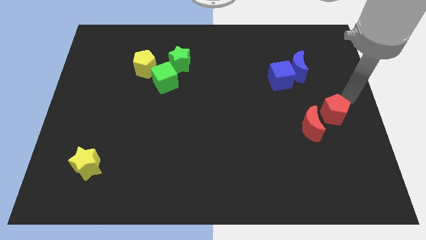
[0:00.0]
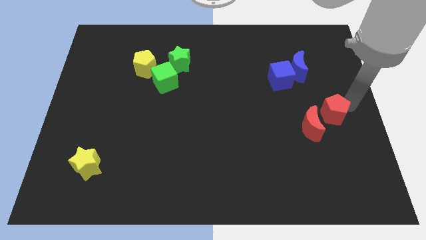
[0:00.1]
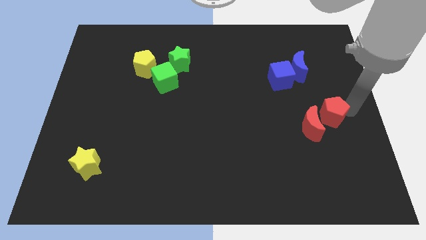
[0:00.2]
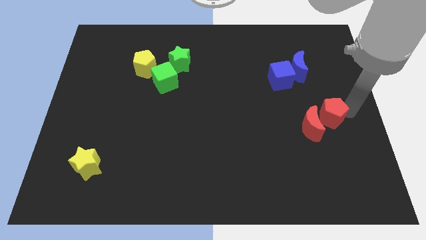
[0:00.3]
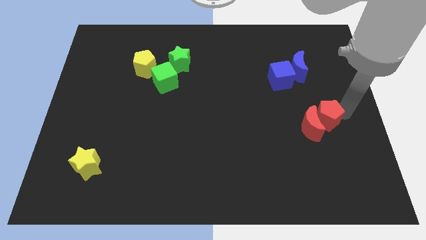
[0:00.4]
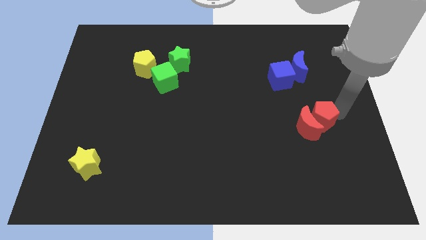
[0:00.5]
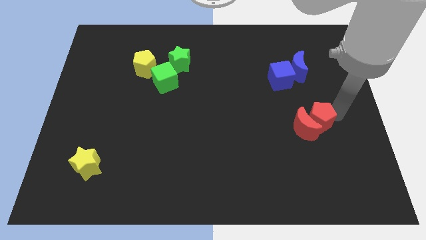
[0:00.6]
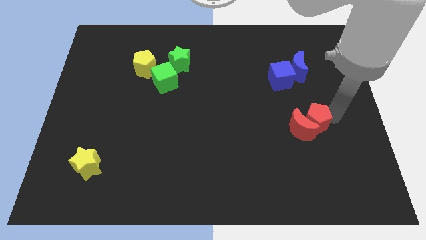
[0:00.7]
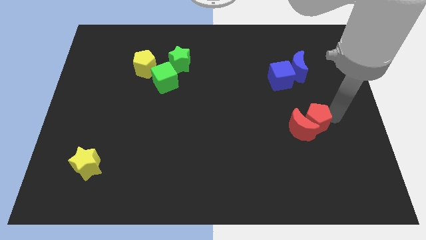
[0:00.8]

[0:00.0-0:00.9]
push the red pentagon into the red crescent

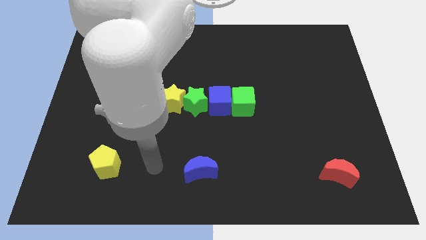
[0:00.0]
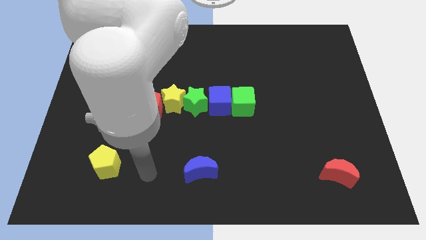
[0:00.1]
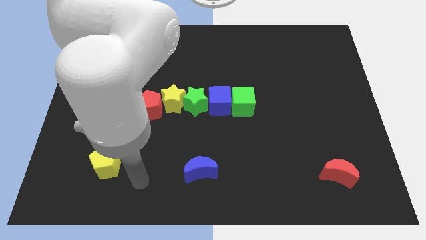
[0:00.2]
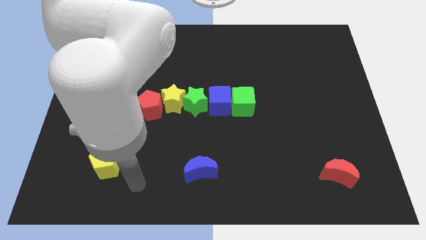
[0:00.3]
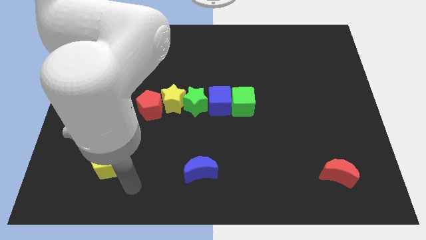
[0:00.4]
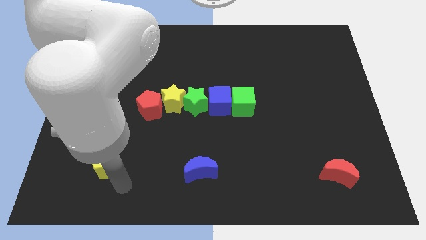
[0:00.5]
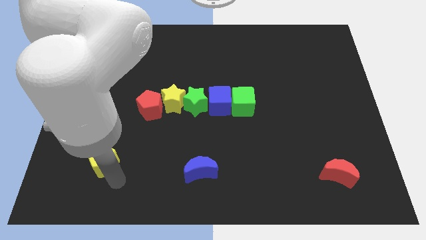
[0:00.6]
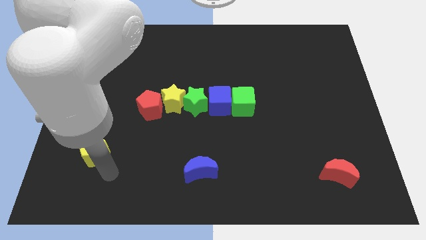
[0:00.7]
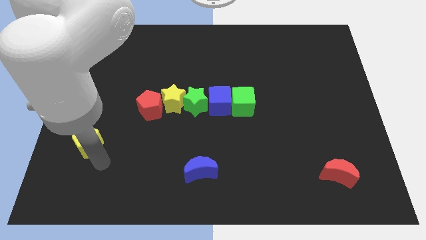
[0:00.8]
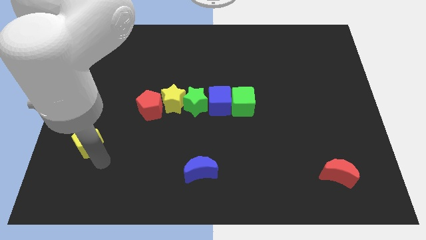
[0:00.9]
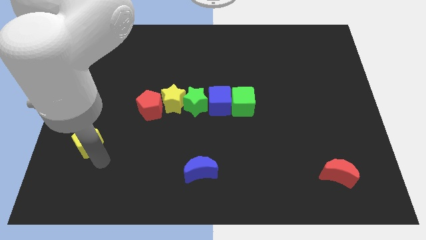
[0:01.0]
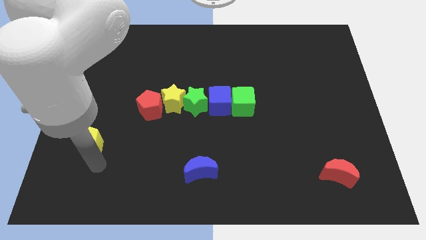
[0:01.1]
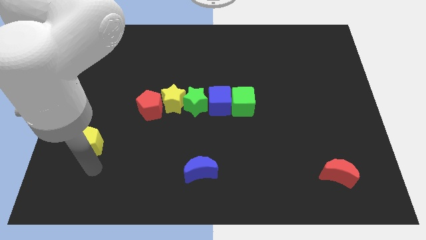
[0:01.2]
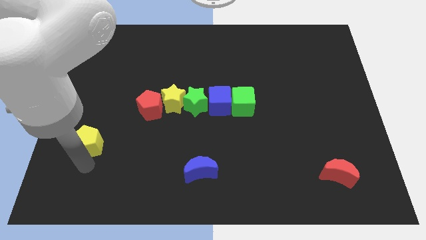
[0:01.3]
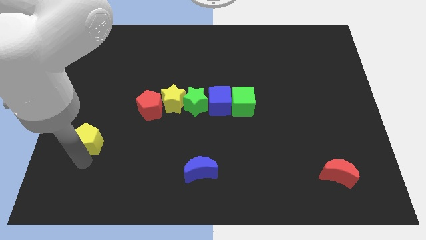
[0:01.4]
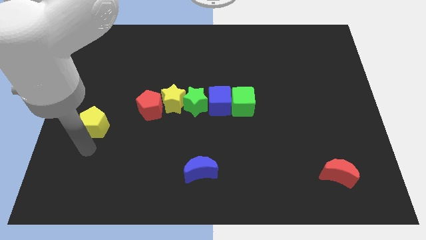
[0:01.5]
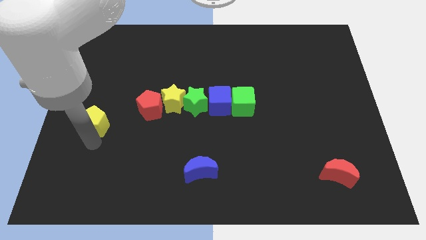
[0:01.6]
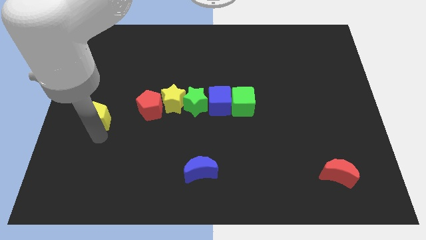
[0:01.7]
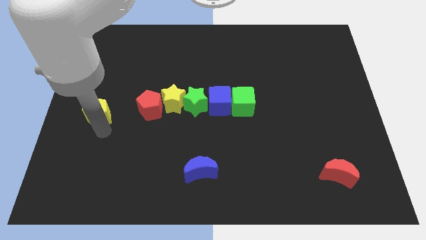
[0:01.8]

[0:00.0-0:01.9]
push the yellow pentagon towards the left center of the board

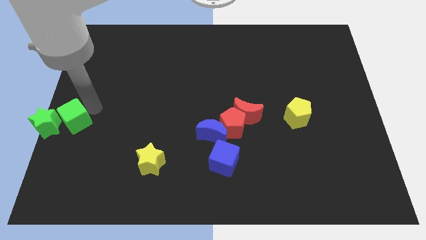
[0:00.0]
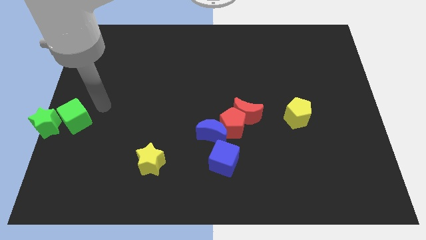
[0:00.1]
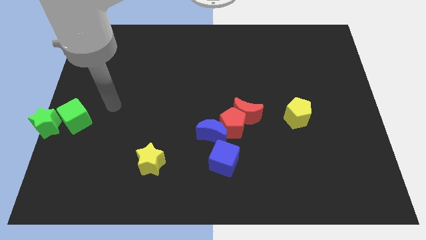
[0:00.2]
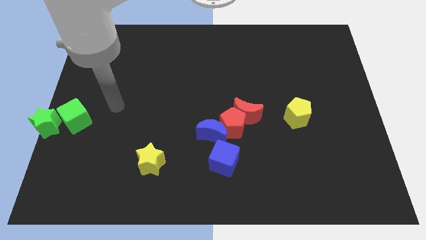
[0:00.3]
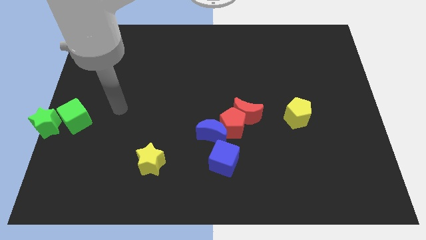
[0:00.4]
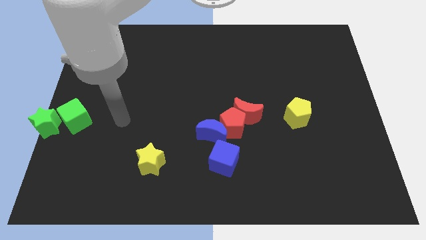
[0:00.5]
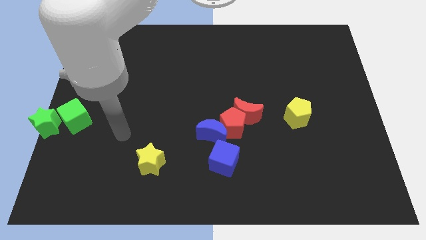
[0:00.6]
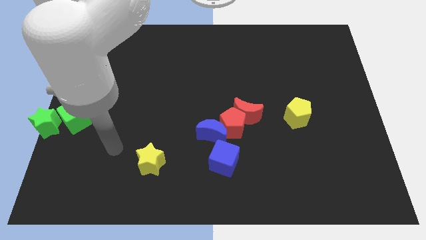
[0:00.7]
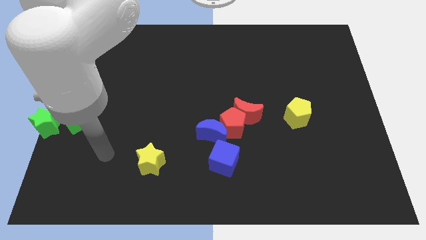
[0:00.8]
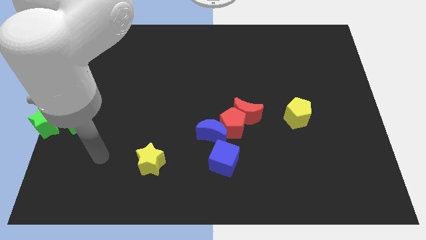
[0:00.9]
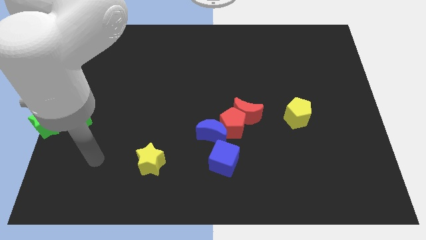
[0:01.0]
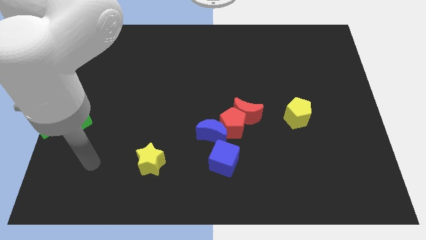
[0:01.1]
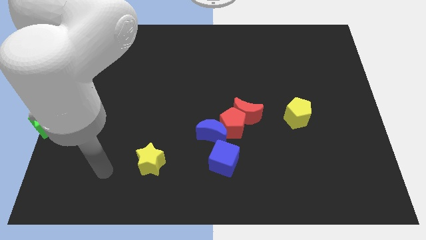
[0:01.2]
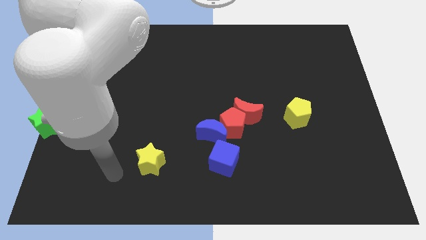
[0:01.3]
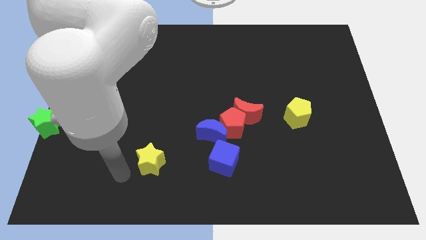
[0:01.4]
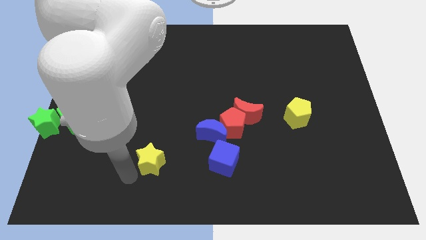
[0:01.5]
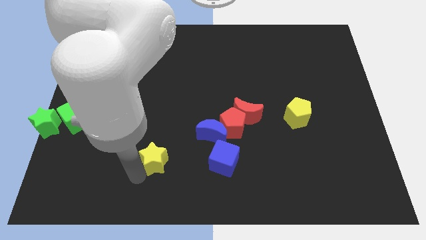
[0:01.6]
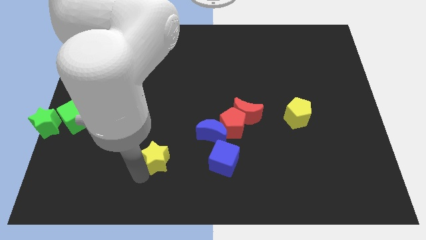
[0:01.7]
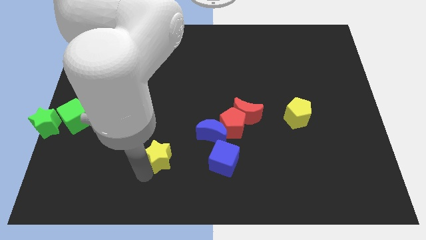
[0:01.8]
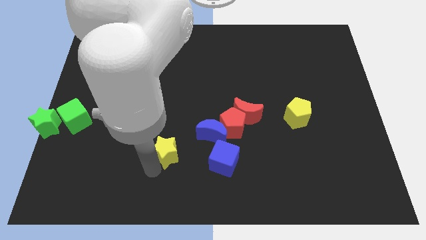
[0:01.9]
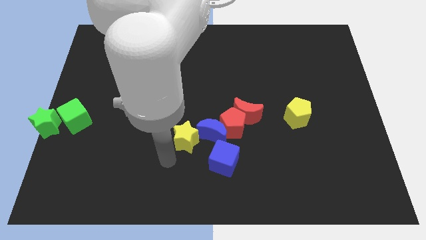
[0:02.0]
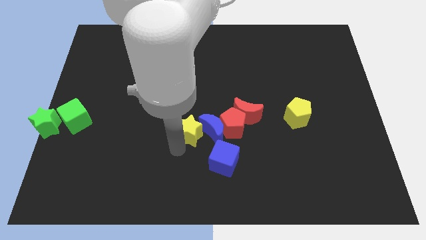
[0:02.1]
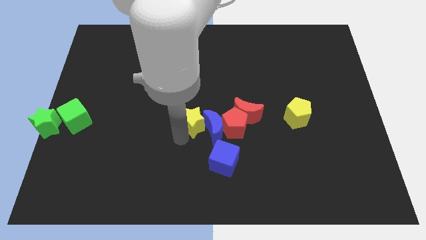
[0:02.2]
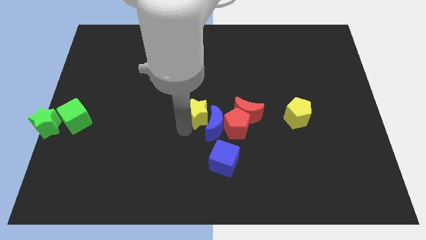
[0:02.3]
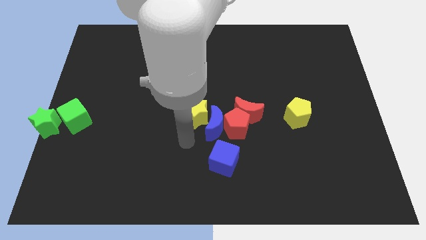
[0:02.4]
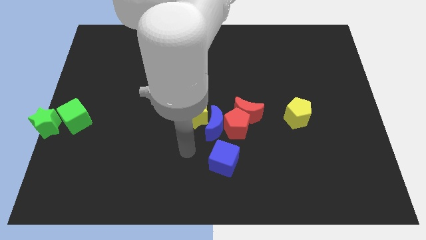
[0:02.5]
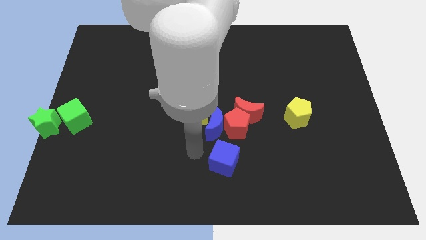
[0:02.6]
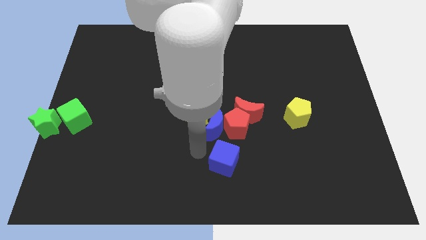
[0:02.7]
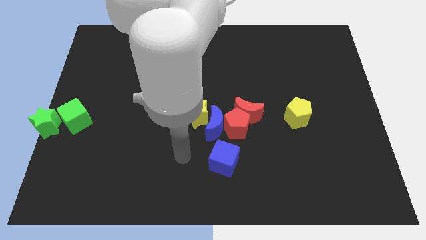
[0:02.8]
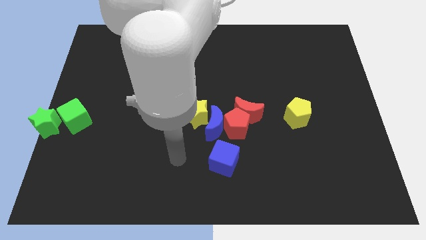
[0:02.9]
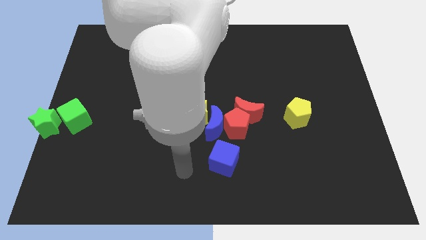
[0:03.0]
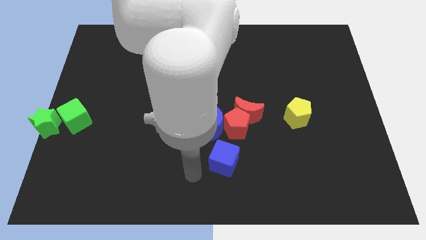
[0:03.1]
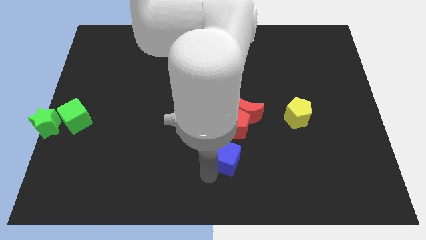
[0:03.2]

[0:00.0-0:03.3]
push the yellow star at the center

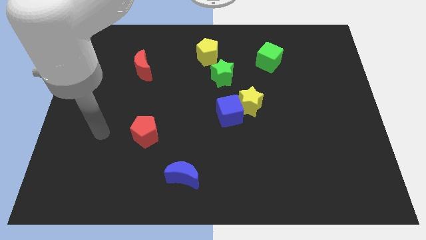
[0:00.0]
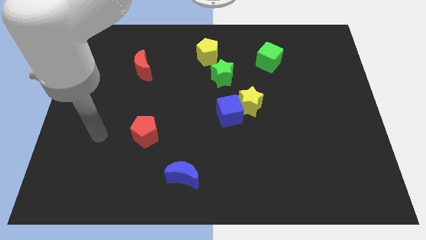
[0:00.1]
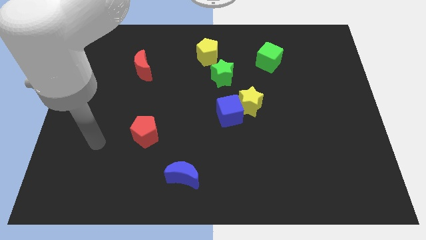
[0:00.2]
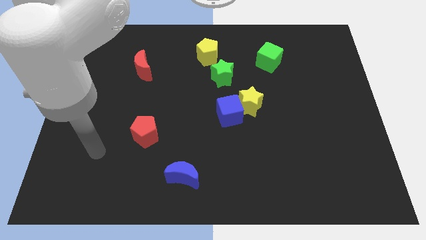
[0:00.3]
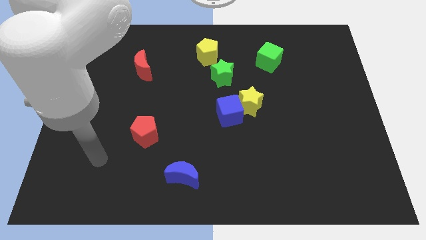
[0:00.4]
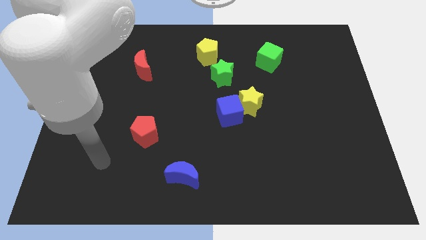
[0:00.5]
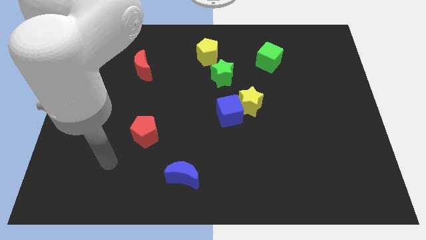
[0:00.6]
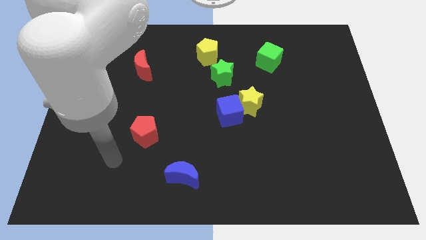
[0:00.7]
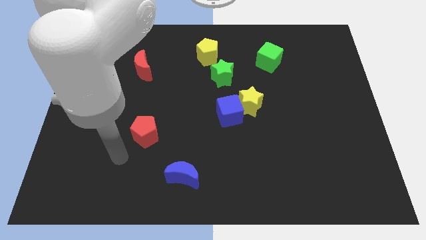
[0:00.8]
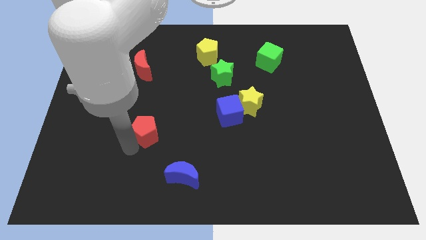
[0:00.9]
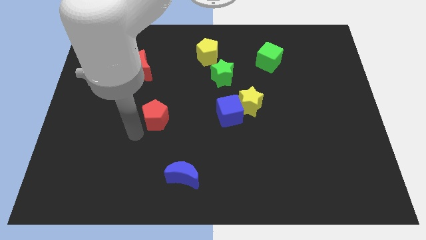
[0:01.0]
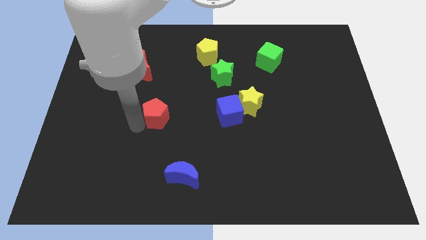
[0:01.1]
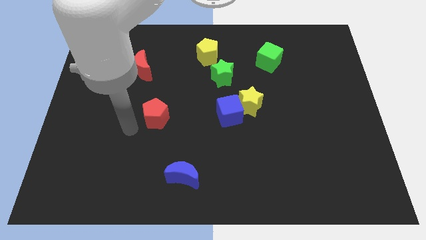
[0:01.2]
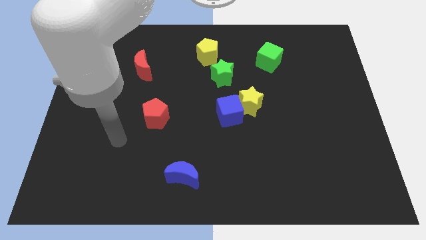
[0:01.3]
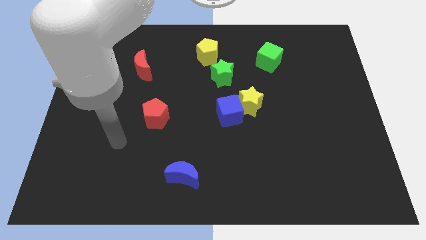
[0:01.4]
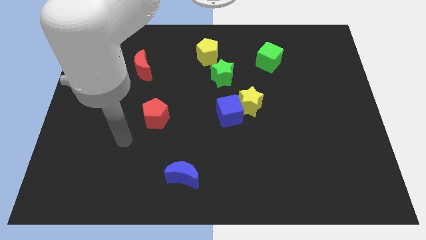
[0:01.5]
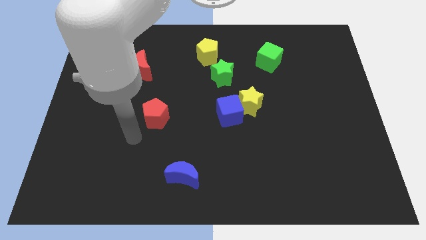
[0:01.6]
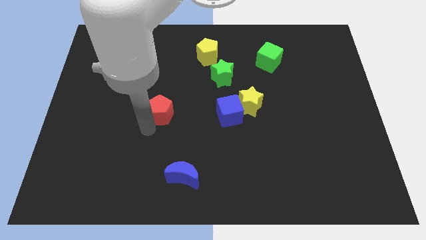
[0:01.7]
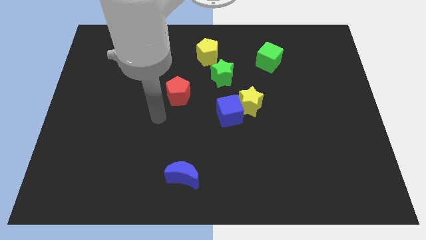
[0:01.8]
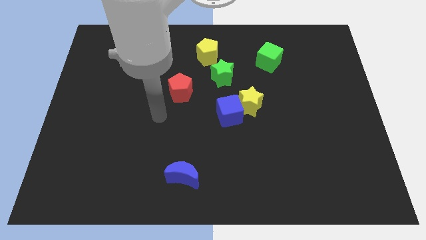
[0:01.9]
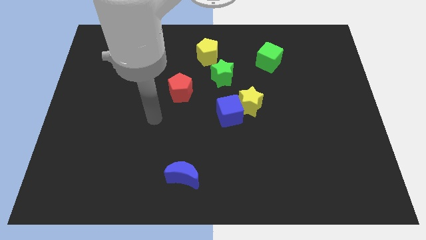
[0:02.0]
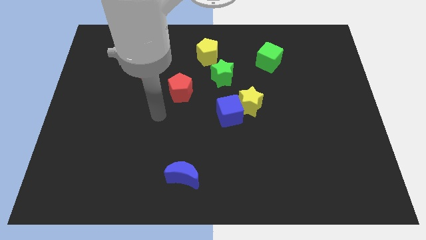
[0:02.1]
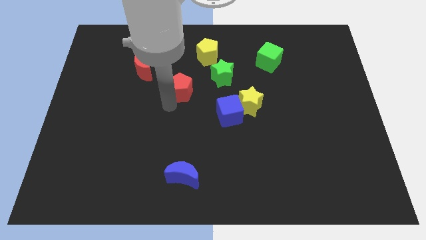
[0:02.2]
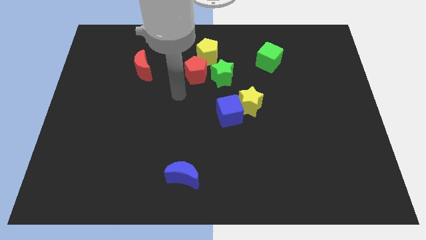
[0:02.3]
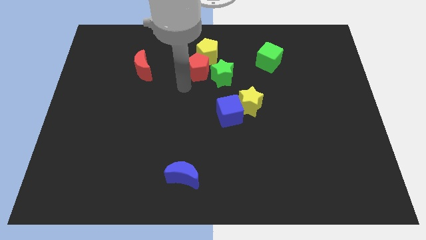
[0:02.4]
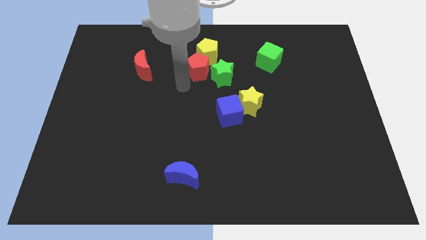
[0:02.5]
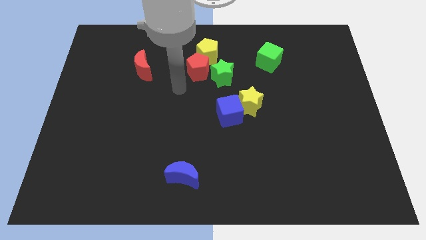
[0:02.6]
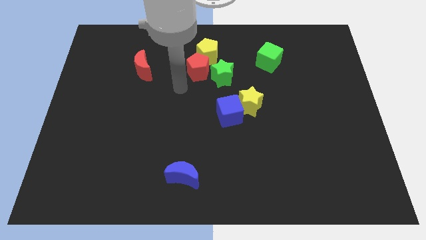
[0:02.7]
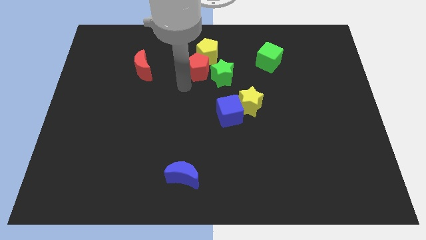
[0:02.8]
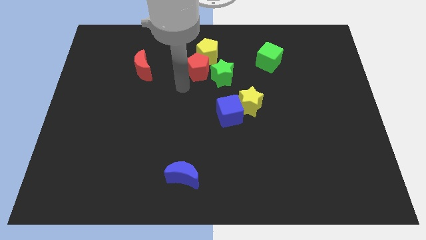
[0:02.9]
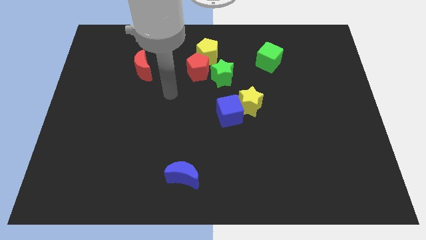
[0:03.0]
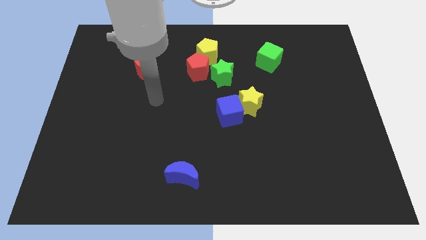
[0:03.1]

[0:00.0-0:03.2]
push red pentagon into yellow pentagon
